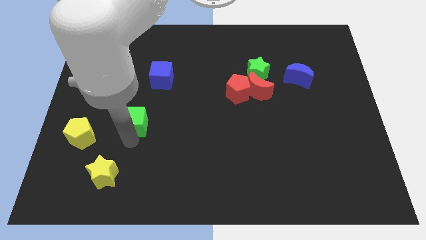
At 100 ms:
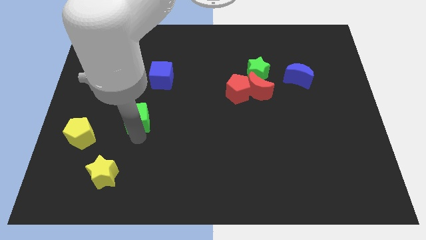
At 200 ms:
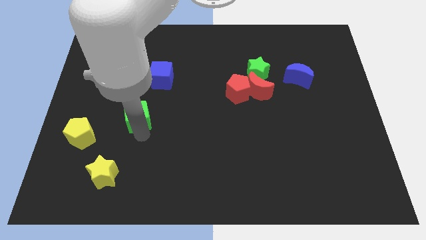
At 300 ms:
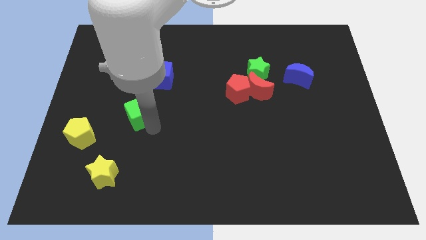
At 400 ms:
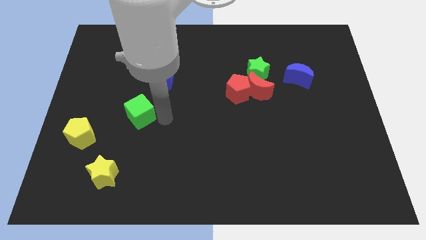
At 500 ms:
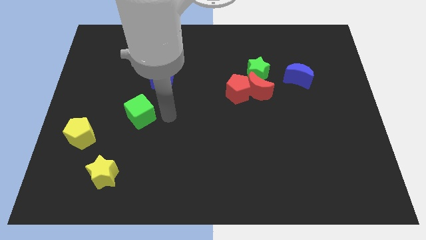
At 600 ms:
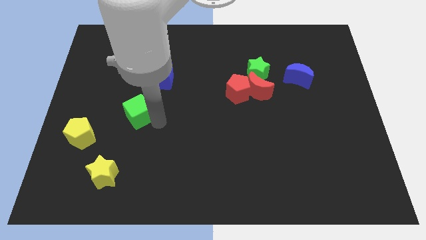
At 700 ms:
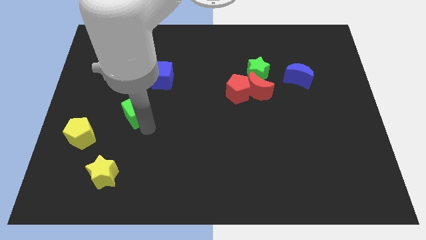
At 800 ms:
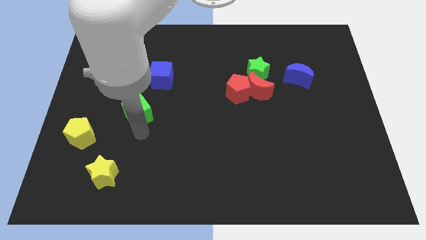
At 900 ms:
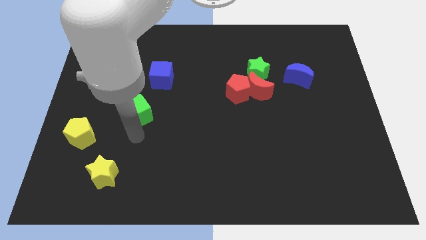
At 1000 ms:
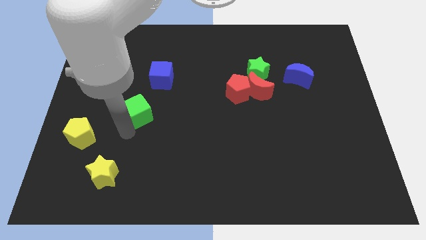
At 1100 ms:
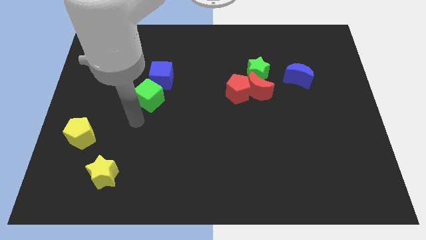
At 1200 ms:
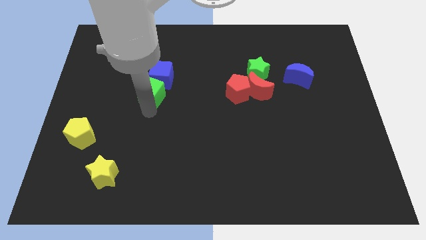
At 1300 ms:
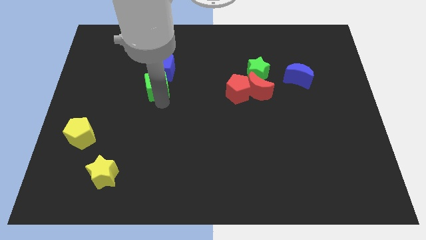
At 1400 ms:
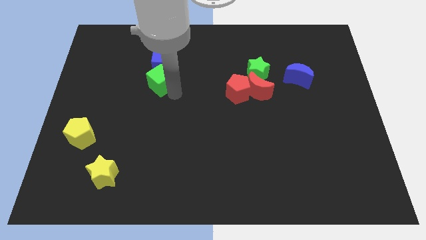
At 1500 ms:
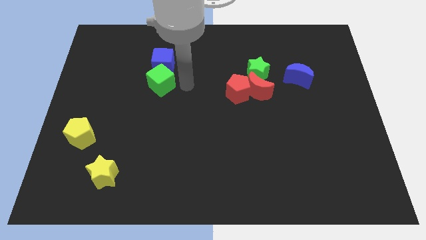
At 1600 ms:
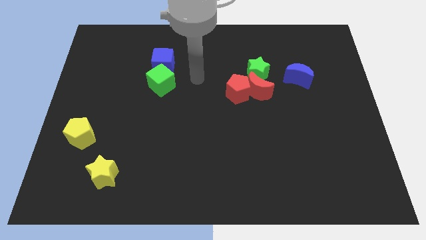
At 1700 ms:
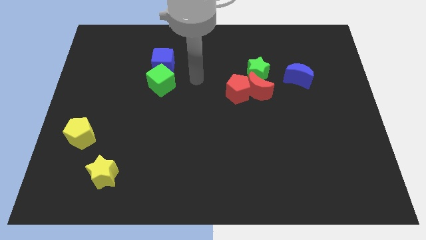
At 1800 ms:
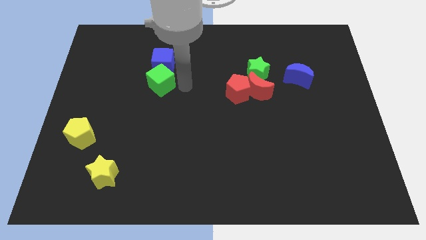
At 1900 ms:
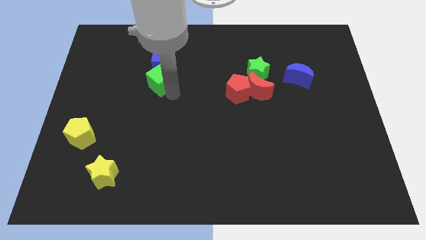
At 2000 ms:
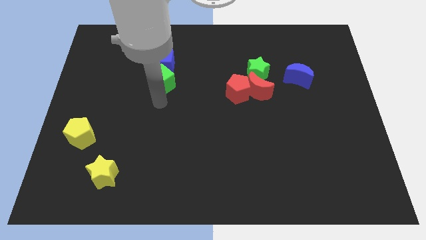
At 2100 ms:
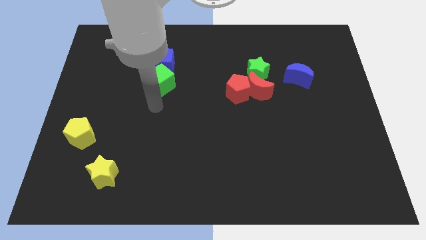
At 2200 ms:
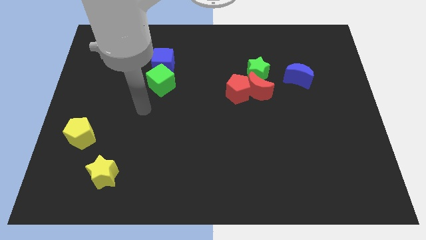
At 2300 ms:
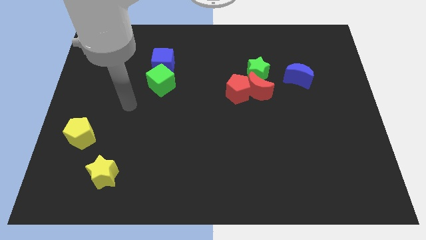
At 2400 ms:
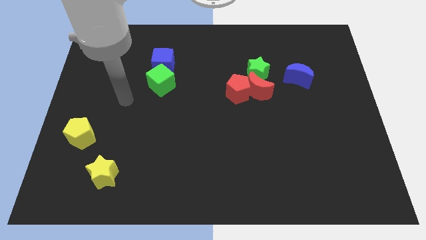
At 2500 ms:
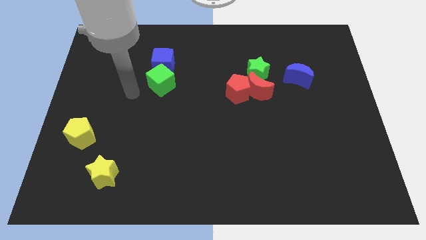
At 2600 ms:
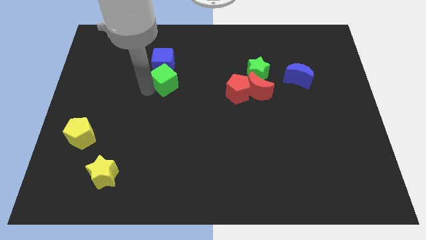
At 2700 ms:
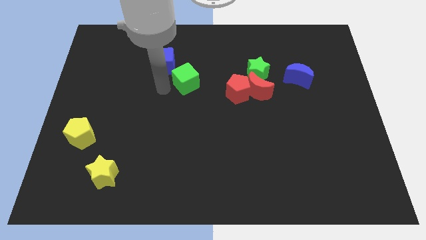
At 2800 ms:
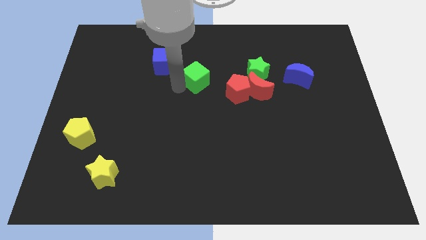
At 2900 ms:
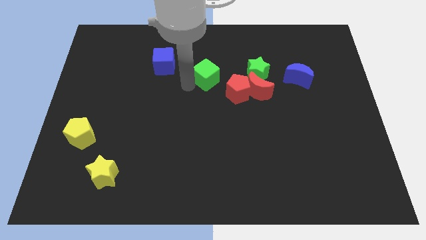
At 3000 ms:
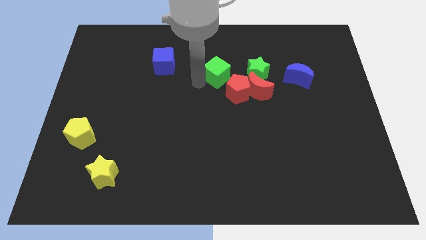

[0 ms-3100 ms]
move the green cube to the left of the green star

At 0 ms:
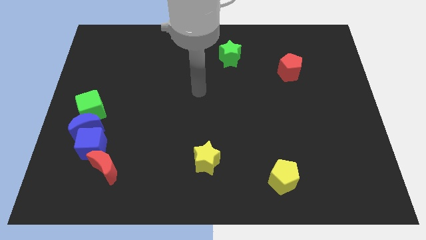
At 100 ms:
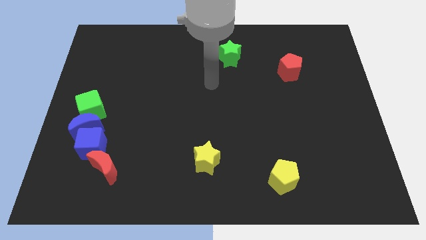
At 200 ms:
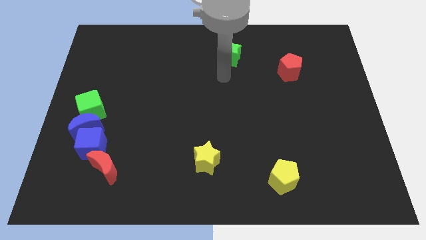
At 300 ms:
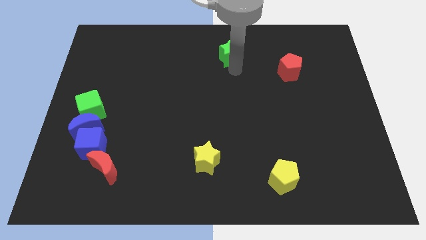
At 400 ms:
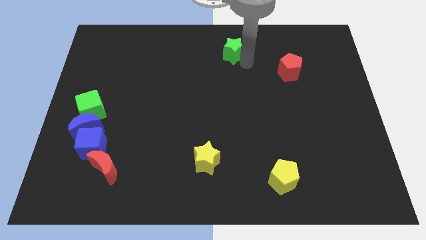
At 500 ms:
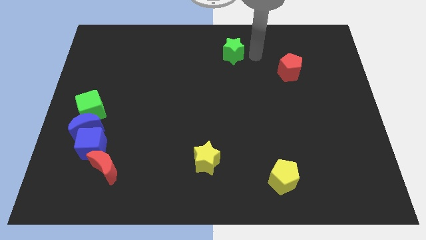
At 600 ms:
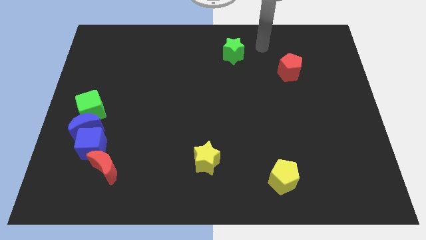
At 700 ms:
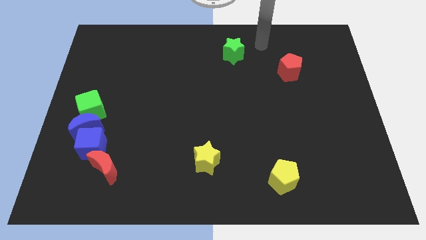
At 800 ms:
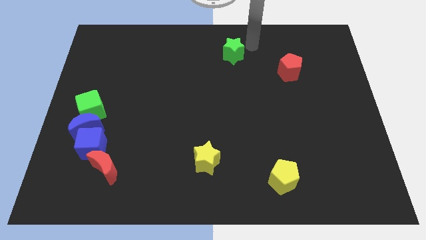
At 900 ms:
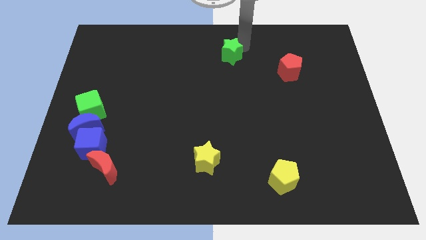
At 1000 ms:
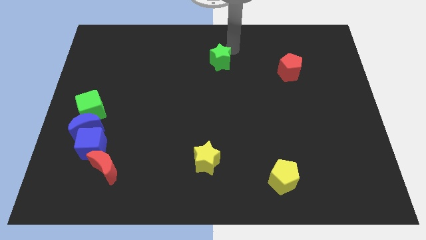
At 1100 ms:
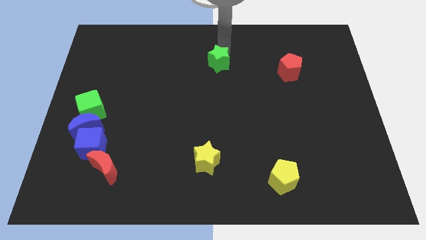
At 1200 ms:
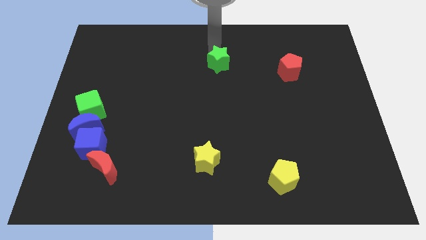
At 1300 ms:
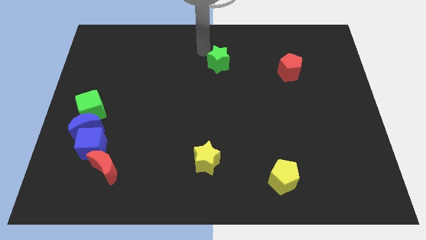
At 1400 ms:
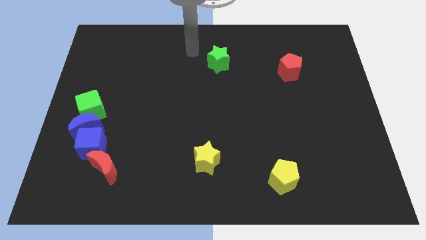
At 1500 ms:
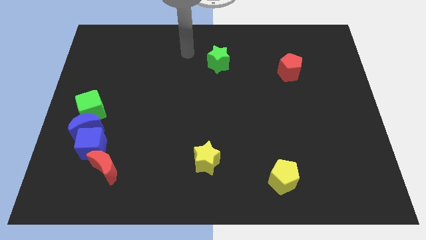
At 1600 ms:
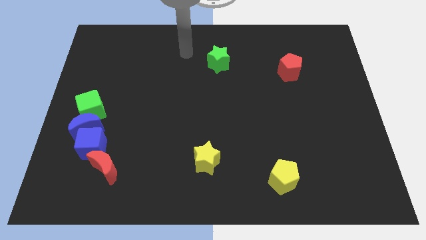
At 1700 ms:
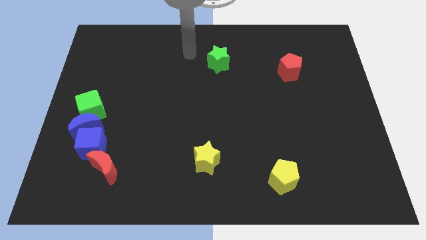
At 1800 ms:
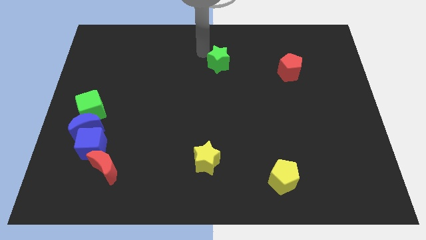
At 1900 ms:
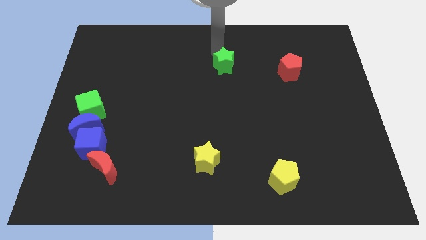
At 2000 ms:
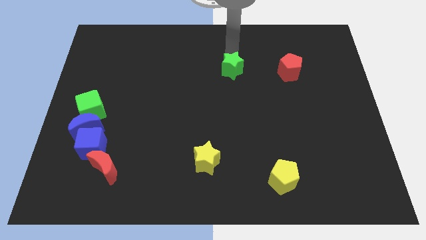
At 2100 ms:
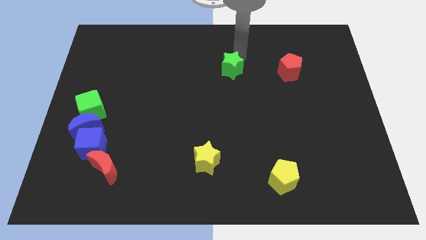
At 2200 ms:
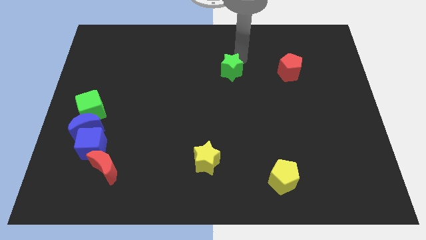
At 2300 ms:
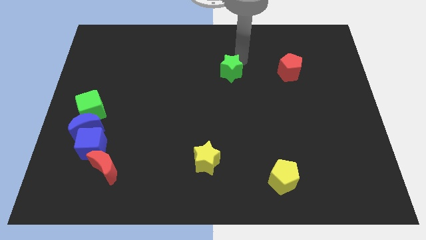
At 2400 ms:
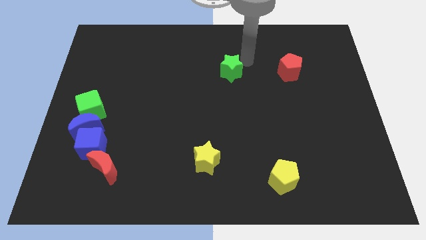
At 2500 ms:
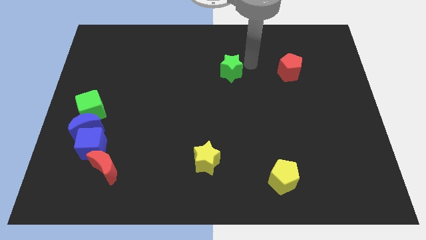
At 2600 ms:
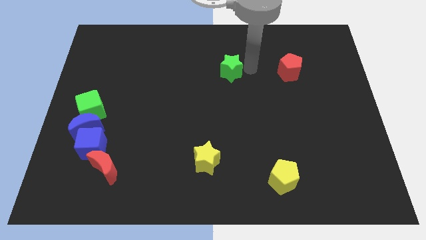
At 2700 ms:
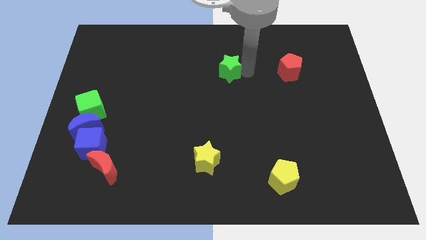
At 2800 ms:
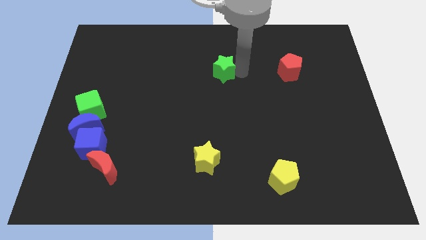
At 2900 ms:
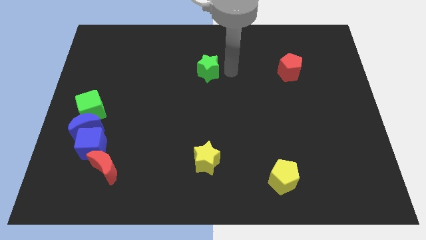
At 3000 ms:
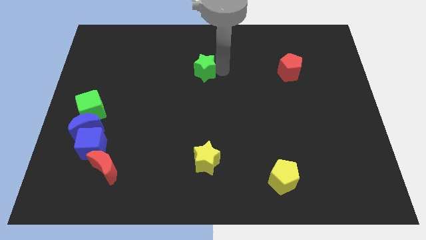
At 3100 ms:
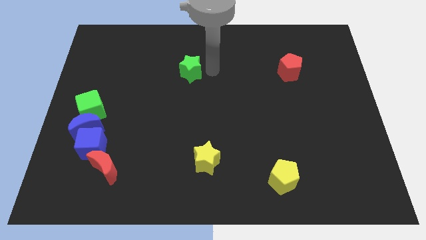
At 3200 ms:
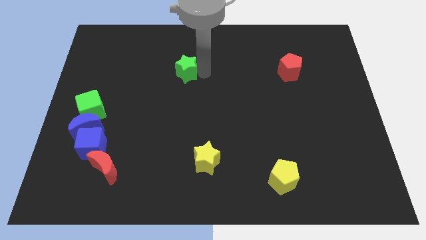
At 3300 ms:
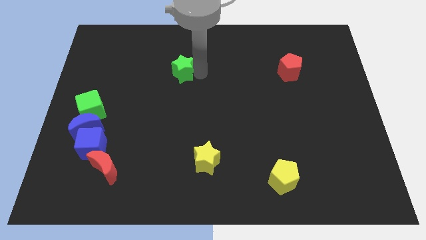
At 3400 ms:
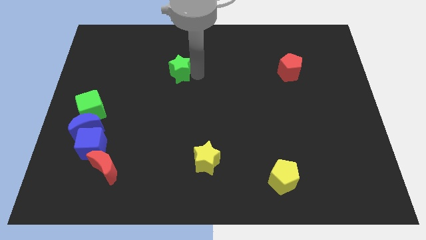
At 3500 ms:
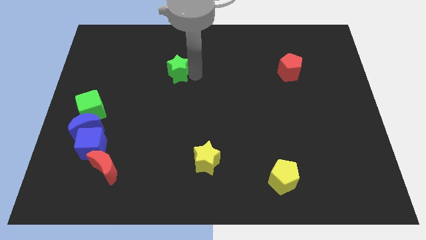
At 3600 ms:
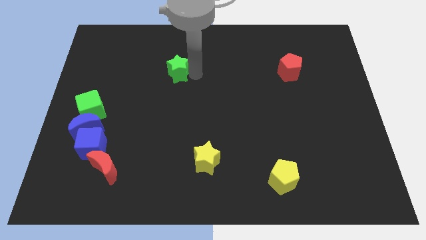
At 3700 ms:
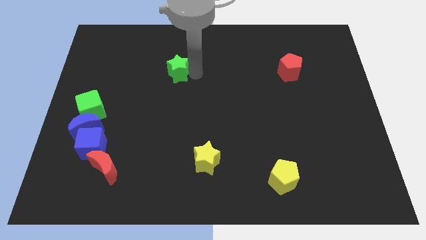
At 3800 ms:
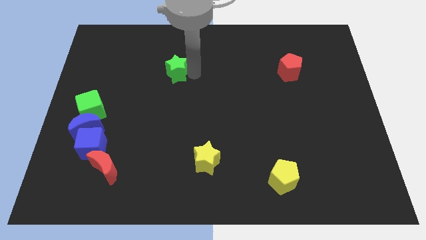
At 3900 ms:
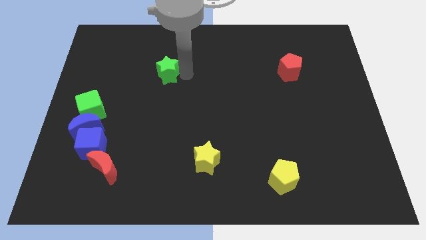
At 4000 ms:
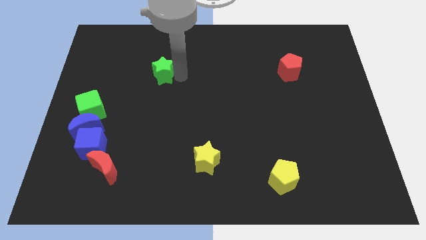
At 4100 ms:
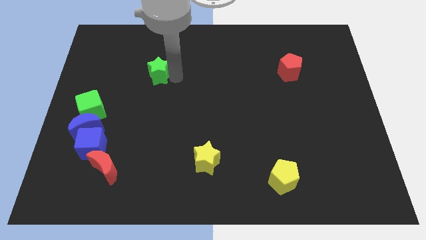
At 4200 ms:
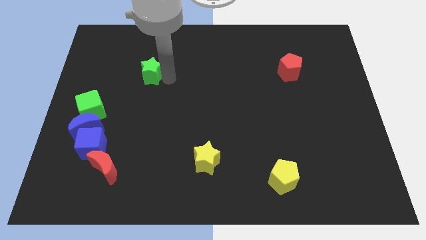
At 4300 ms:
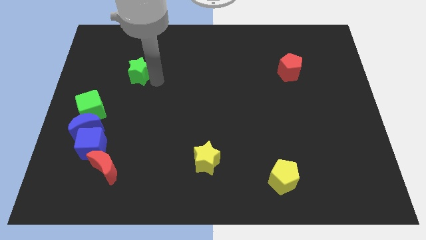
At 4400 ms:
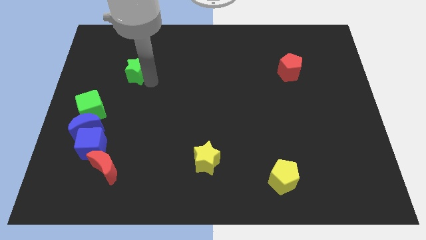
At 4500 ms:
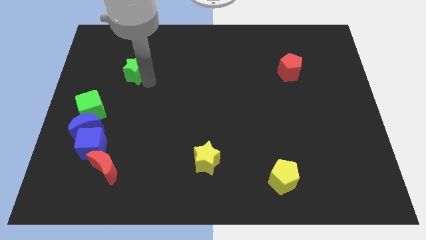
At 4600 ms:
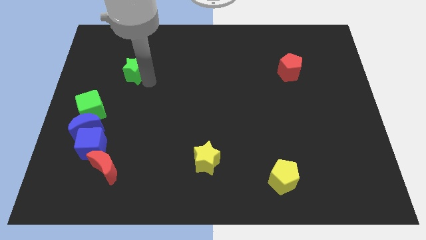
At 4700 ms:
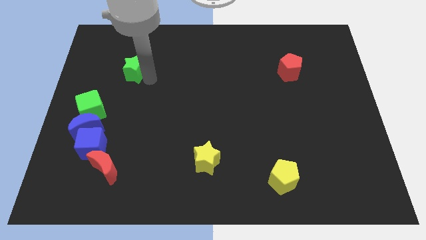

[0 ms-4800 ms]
move the green star towards the left of the board

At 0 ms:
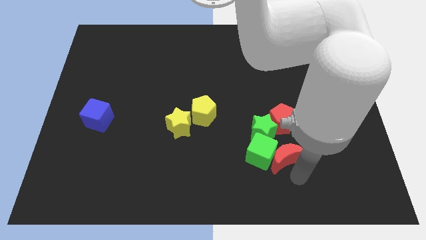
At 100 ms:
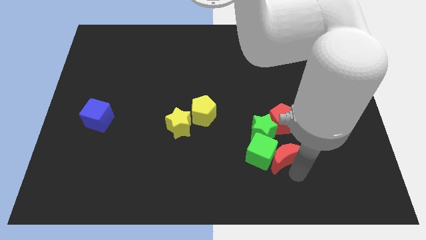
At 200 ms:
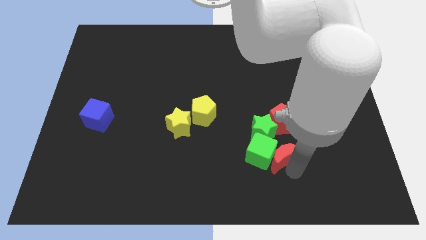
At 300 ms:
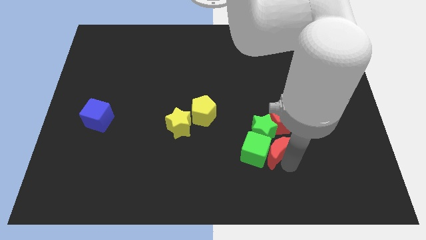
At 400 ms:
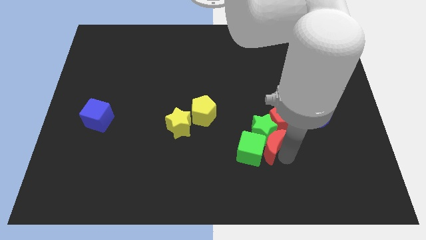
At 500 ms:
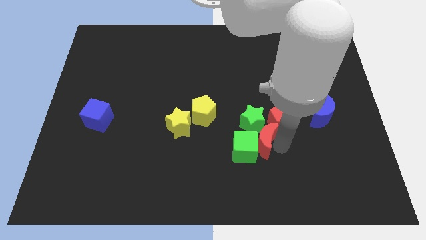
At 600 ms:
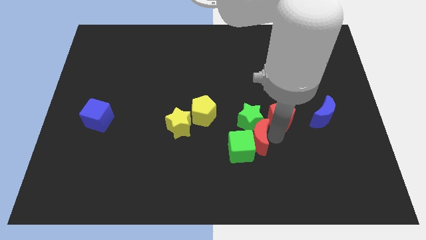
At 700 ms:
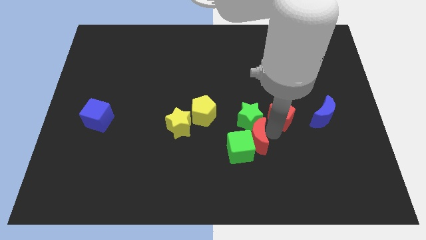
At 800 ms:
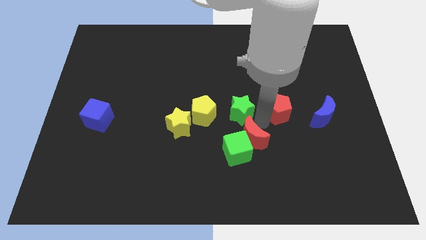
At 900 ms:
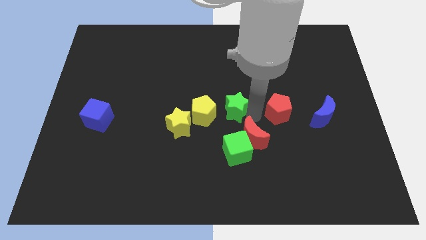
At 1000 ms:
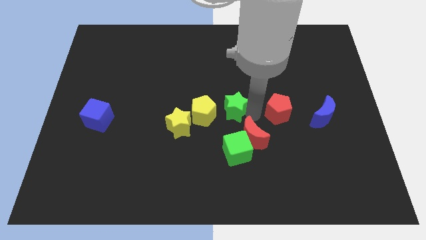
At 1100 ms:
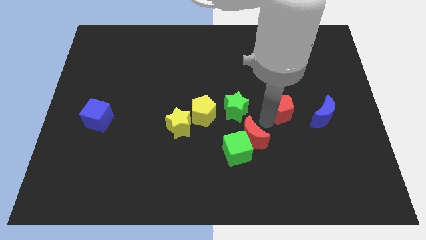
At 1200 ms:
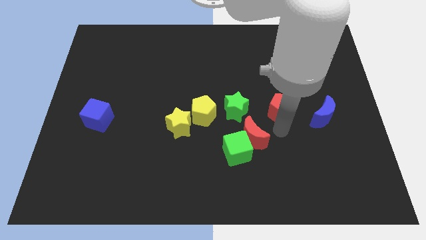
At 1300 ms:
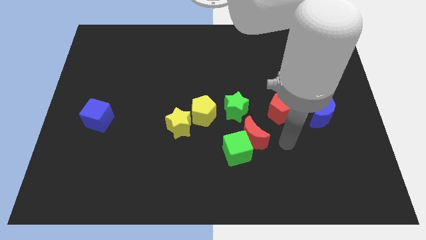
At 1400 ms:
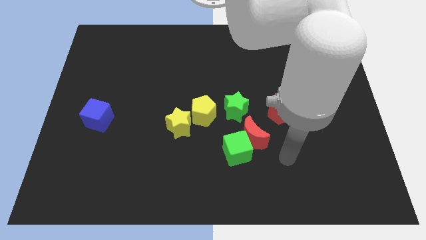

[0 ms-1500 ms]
separate the green star and green cube
